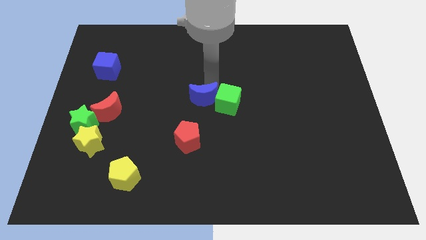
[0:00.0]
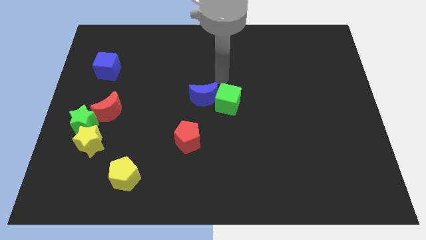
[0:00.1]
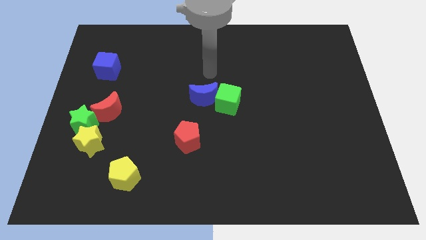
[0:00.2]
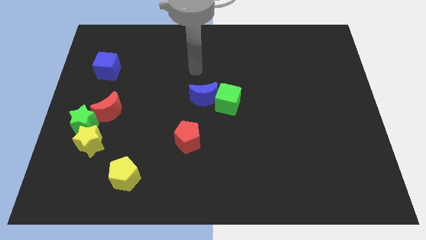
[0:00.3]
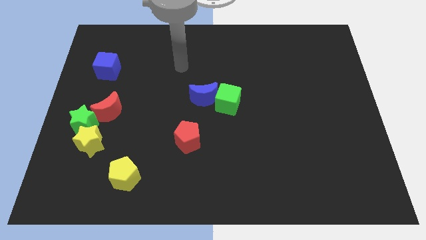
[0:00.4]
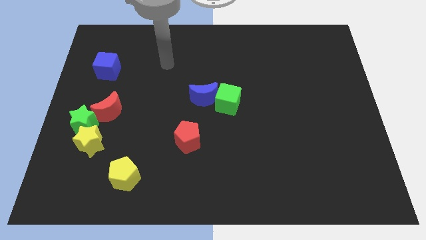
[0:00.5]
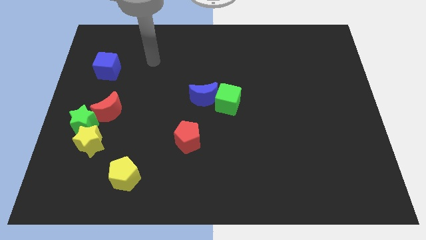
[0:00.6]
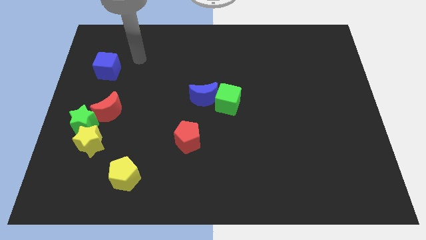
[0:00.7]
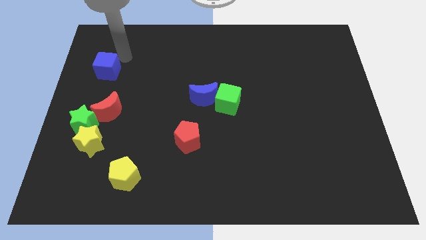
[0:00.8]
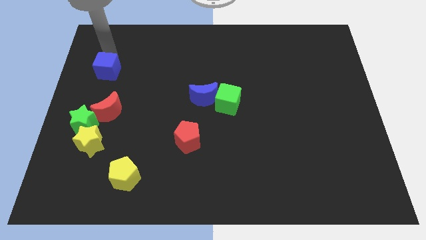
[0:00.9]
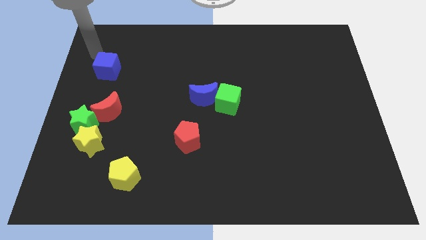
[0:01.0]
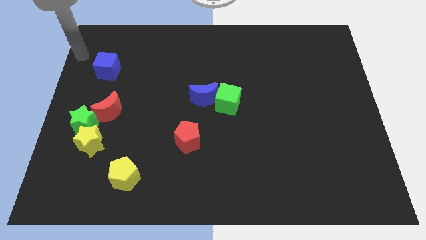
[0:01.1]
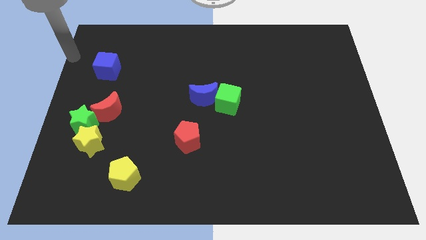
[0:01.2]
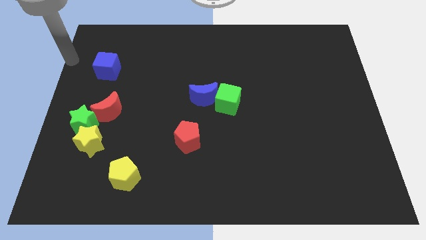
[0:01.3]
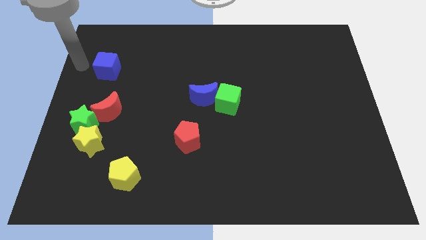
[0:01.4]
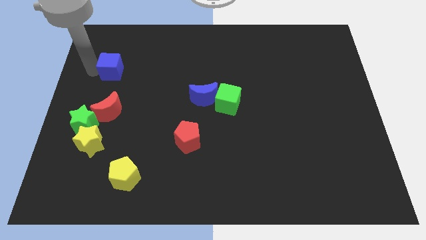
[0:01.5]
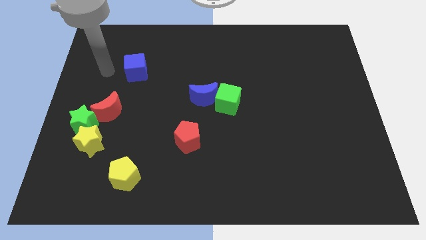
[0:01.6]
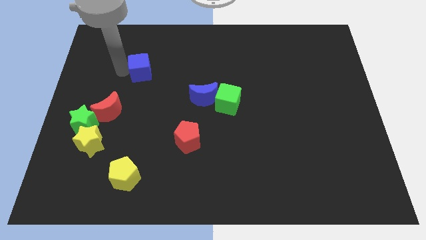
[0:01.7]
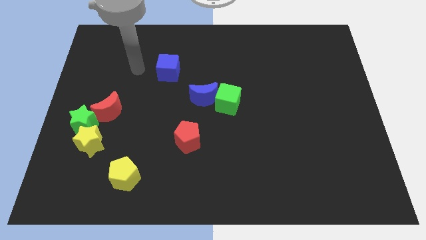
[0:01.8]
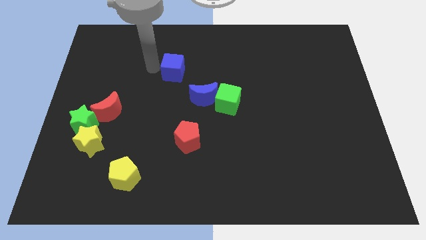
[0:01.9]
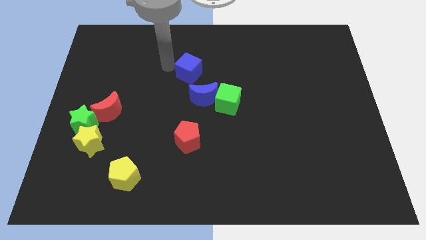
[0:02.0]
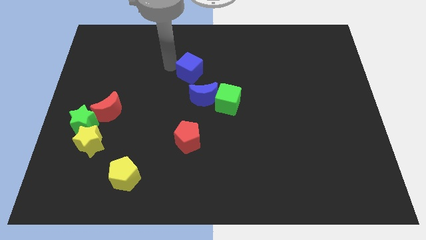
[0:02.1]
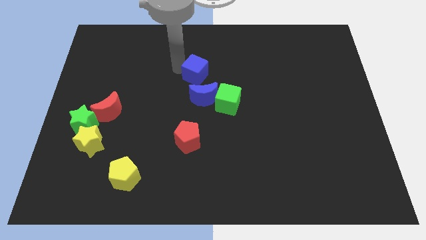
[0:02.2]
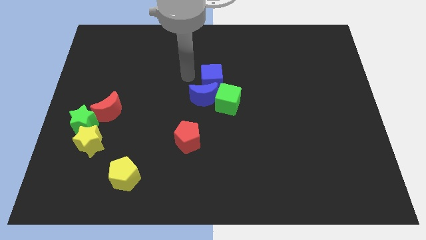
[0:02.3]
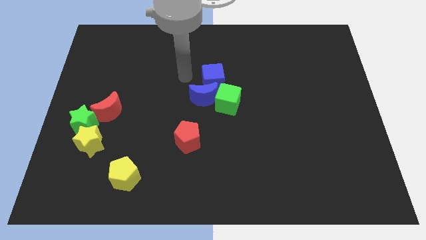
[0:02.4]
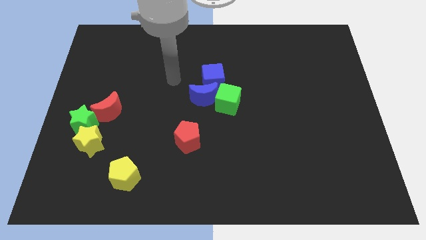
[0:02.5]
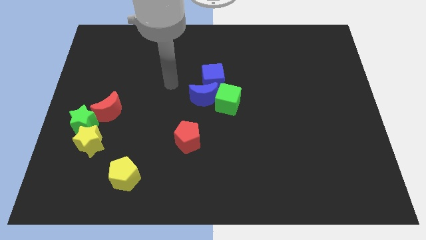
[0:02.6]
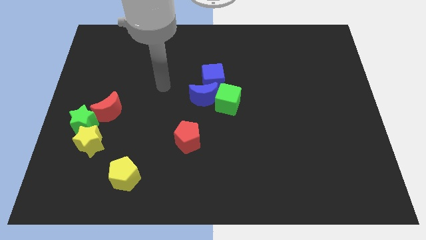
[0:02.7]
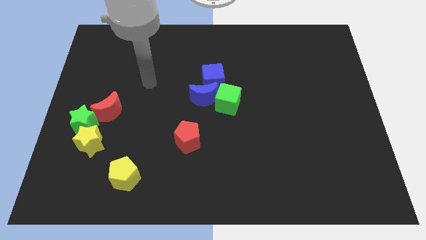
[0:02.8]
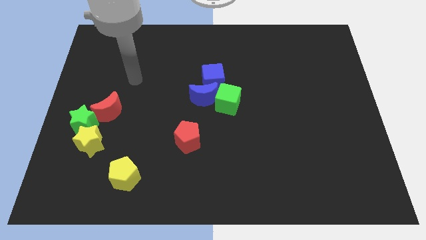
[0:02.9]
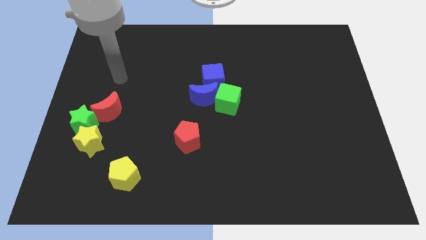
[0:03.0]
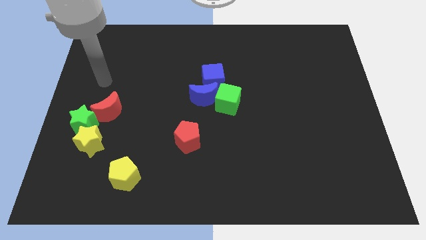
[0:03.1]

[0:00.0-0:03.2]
push the blue cube to the top of the blue crescent

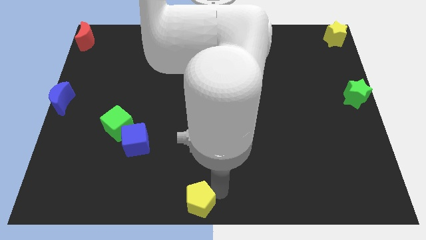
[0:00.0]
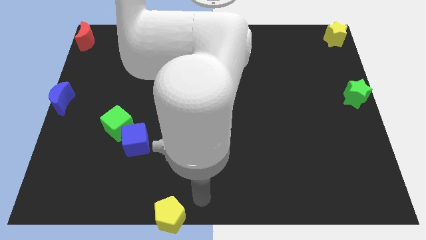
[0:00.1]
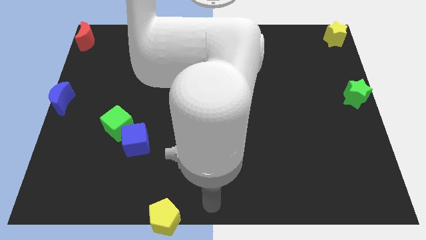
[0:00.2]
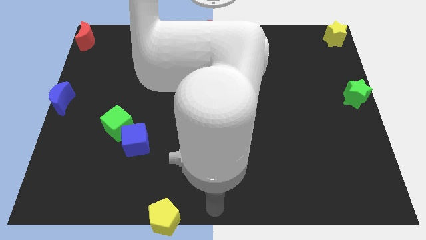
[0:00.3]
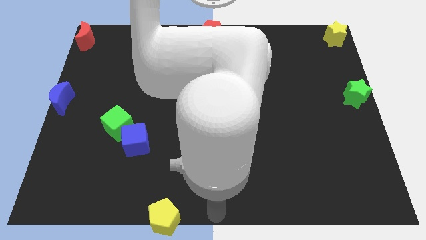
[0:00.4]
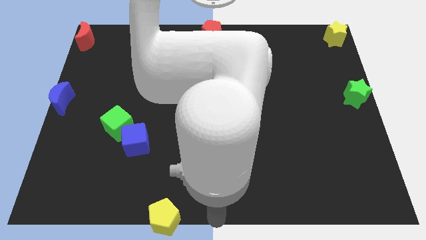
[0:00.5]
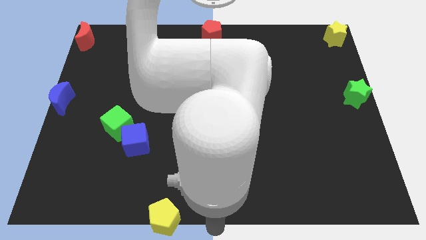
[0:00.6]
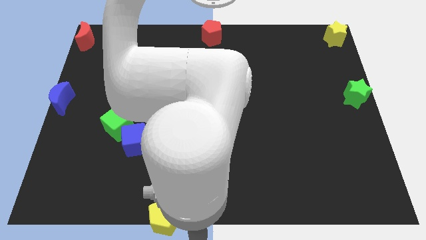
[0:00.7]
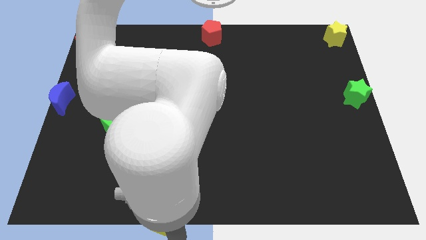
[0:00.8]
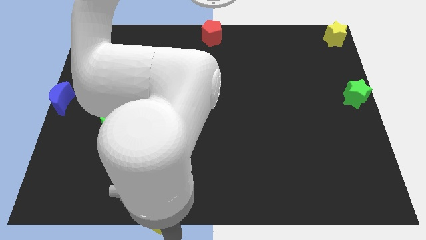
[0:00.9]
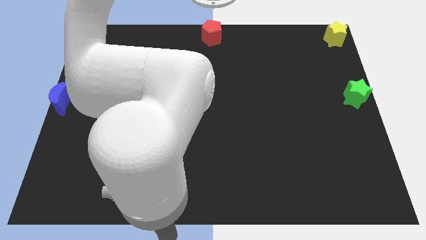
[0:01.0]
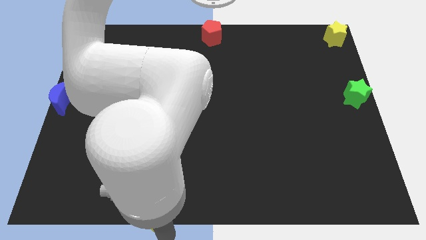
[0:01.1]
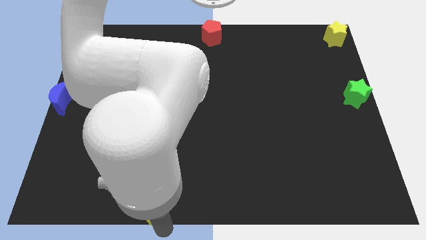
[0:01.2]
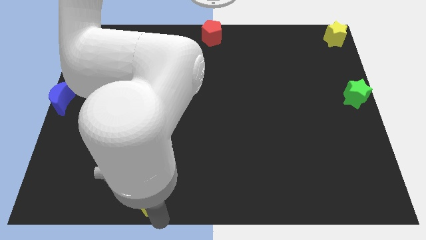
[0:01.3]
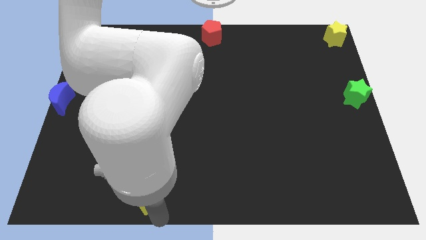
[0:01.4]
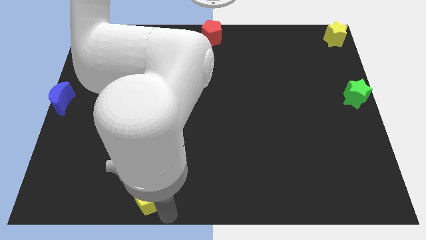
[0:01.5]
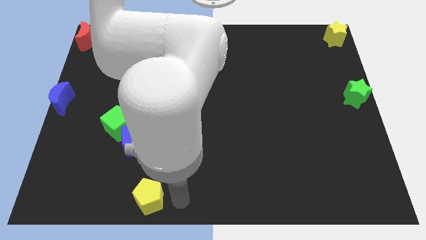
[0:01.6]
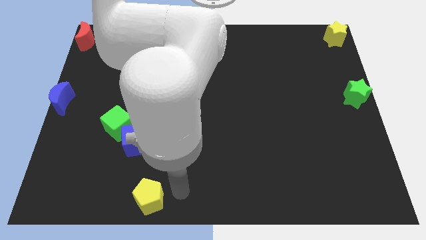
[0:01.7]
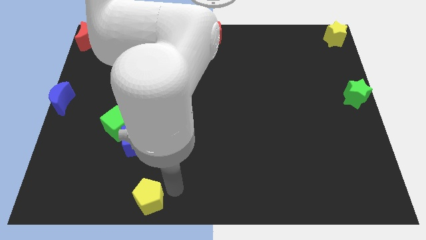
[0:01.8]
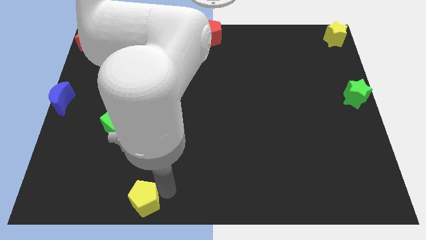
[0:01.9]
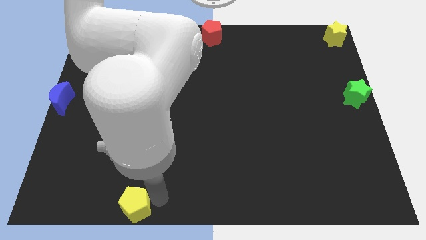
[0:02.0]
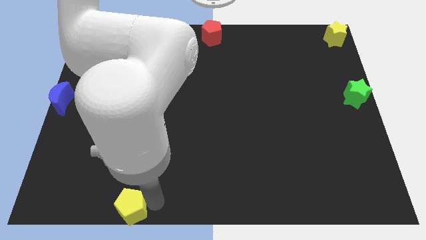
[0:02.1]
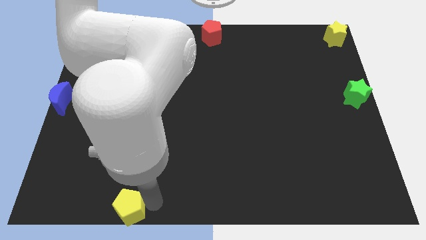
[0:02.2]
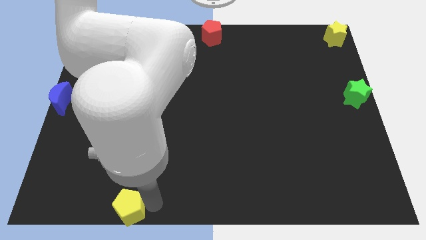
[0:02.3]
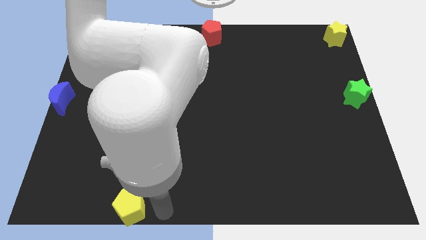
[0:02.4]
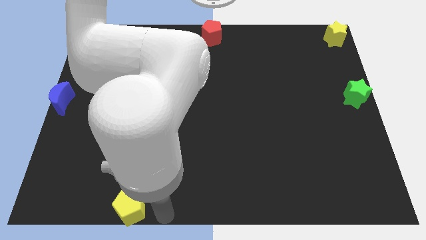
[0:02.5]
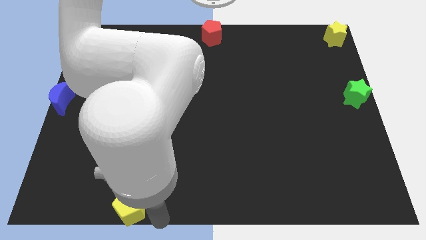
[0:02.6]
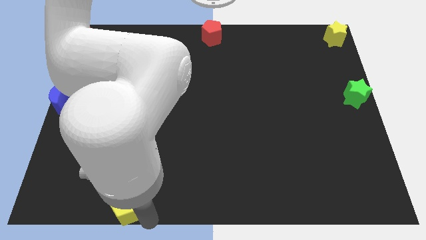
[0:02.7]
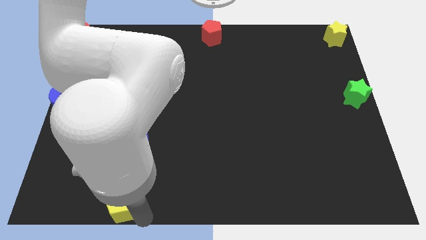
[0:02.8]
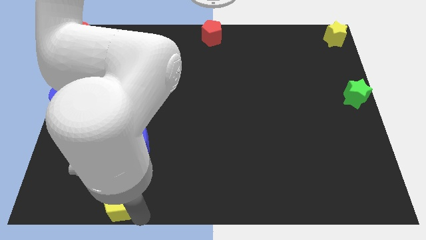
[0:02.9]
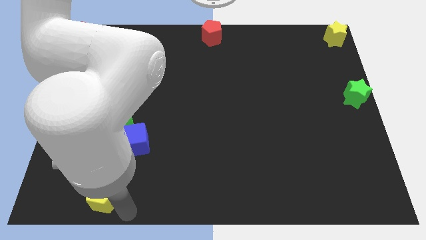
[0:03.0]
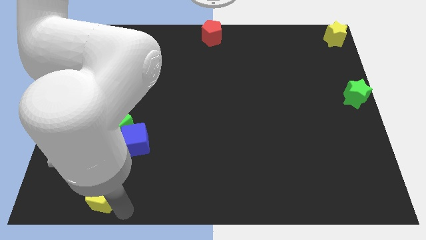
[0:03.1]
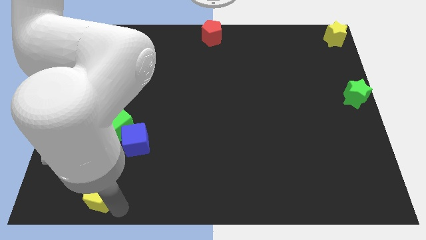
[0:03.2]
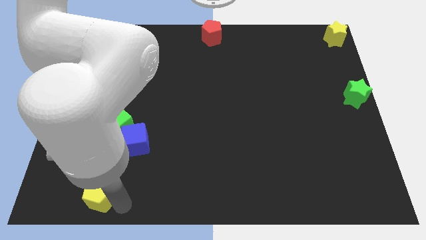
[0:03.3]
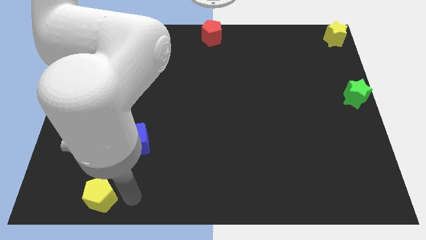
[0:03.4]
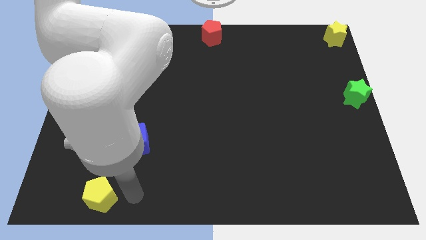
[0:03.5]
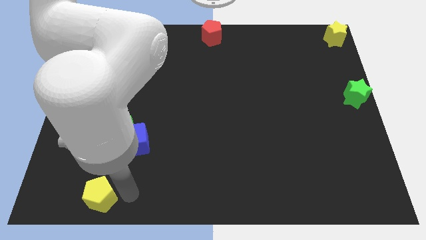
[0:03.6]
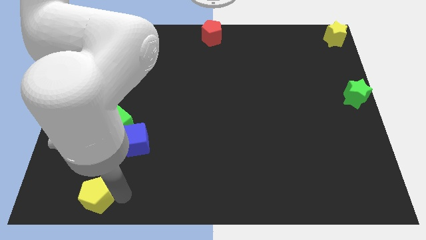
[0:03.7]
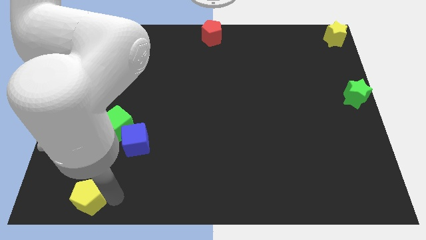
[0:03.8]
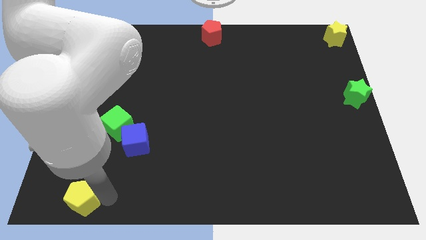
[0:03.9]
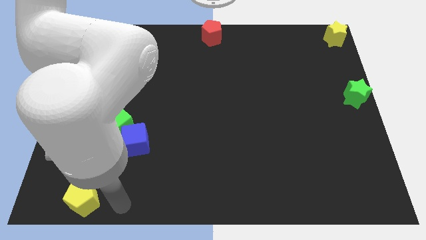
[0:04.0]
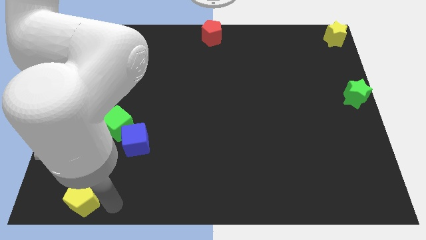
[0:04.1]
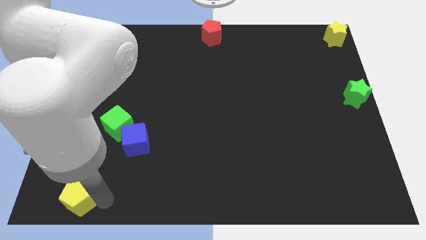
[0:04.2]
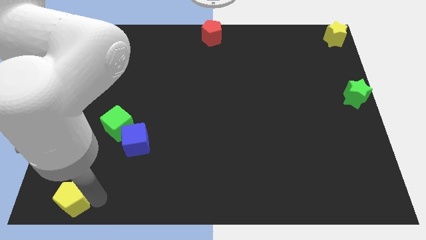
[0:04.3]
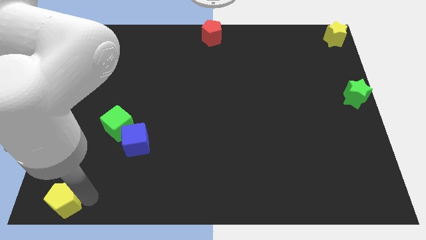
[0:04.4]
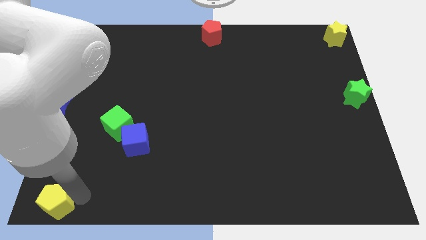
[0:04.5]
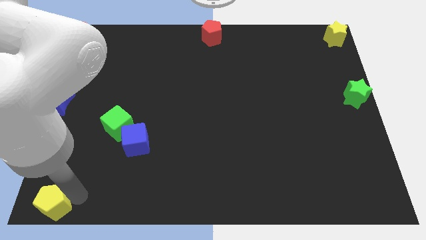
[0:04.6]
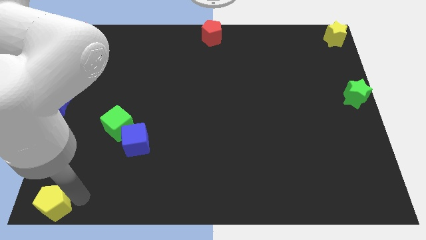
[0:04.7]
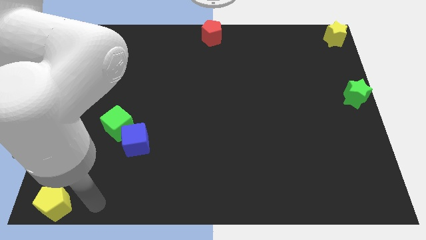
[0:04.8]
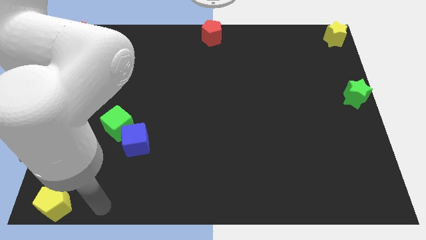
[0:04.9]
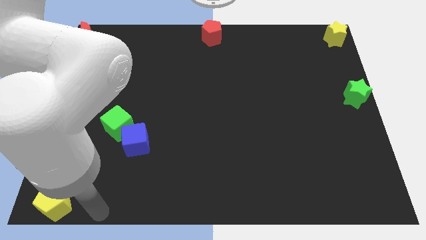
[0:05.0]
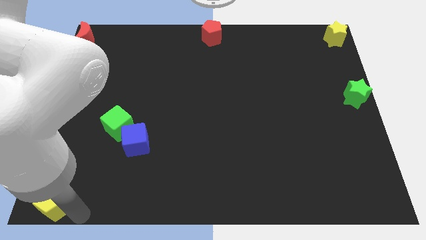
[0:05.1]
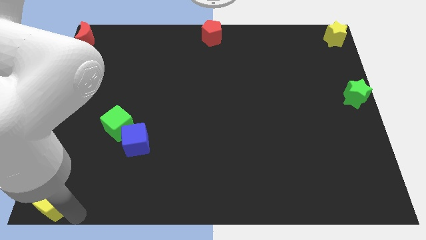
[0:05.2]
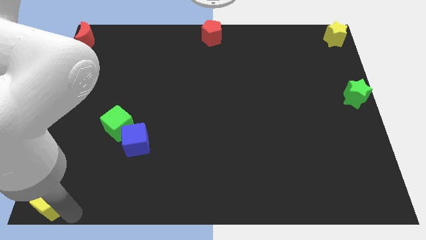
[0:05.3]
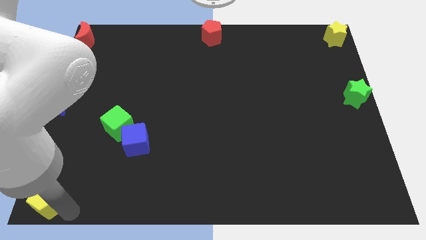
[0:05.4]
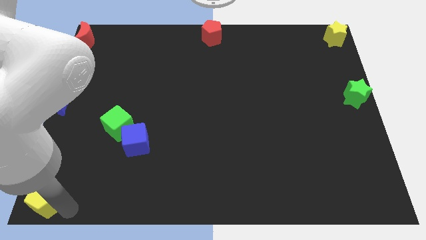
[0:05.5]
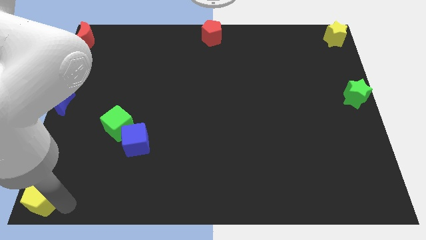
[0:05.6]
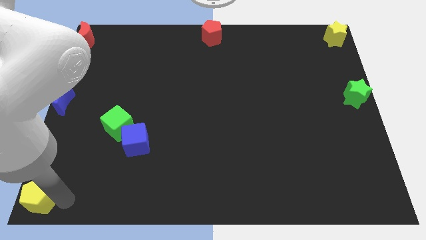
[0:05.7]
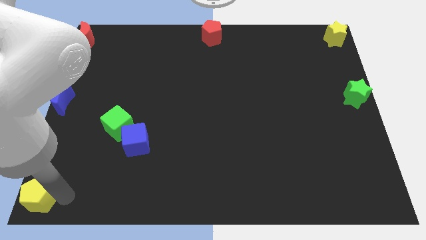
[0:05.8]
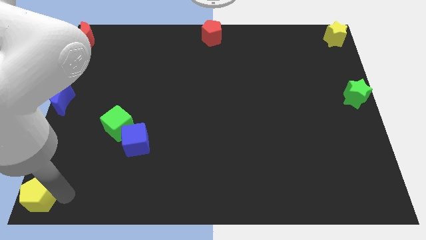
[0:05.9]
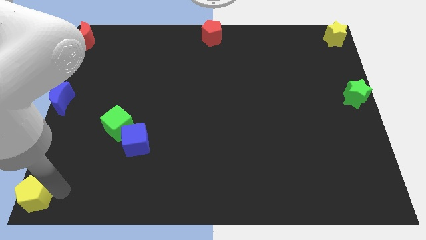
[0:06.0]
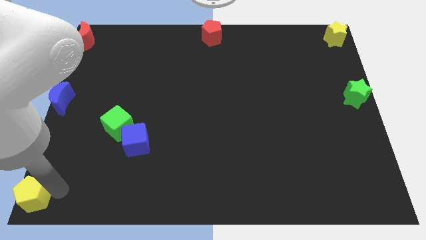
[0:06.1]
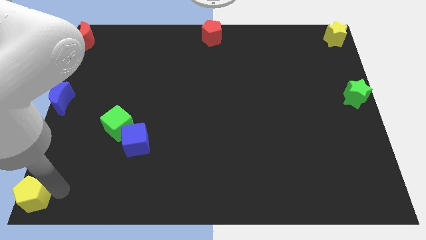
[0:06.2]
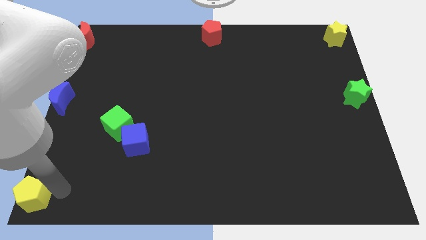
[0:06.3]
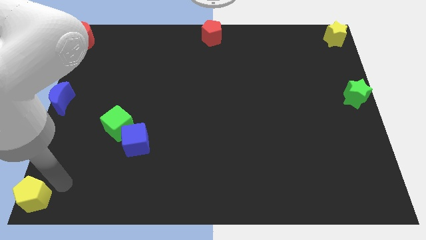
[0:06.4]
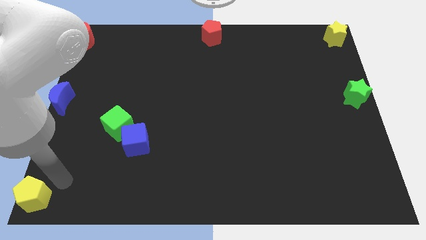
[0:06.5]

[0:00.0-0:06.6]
push the yellow pentagon to the bottom left corner of the board
